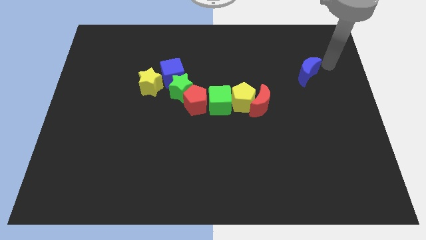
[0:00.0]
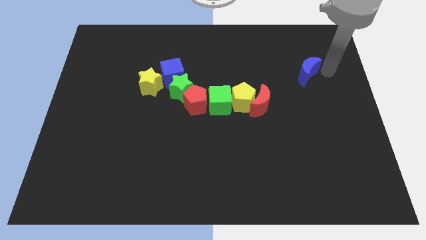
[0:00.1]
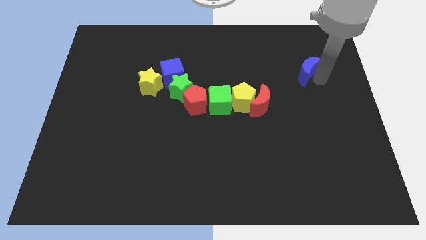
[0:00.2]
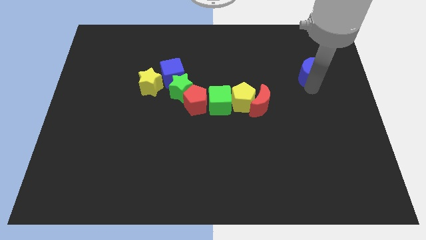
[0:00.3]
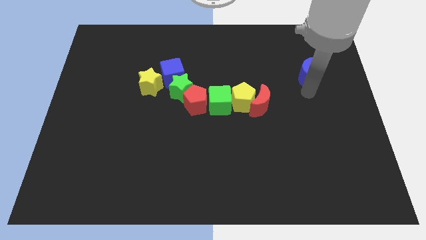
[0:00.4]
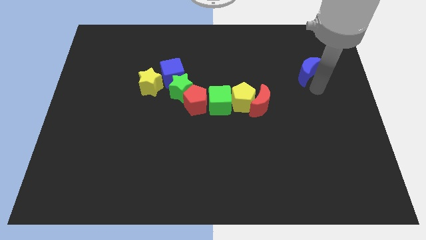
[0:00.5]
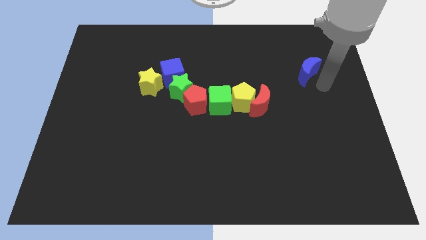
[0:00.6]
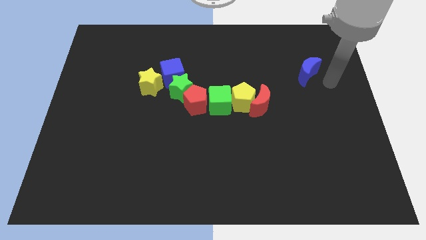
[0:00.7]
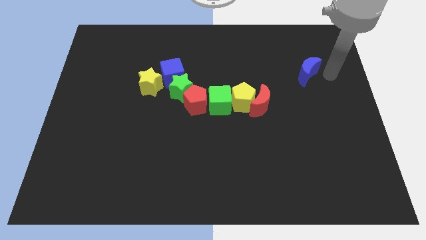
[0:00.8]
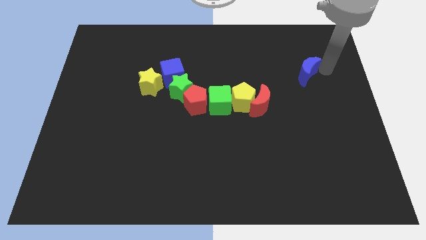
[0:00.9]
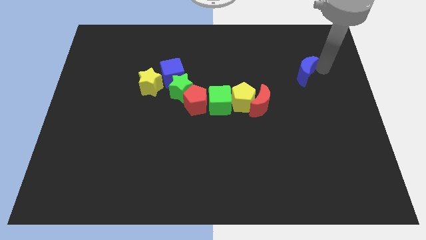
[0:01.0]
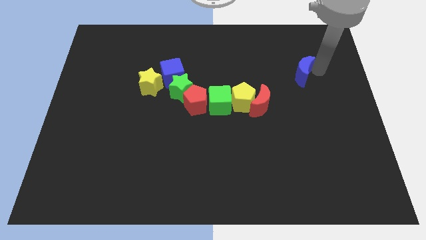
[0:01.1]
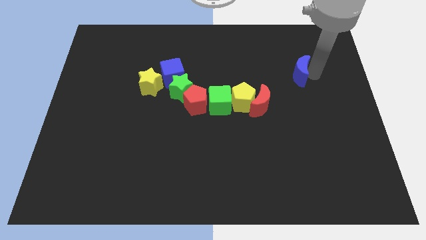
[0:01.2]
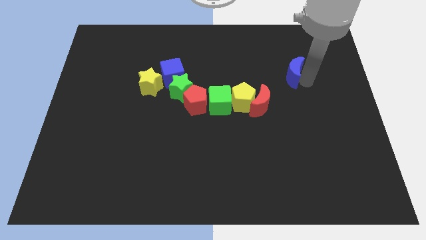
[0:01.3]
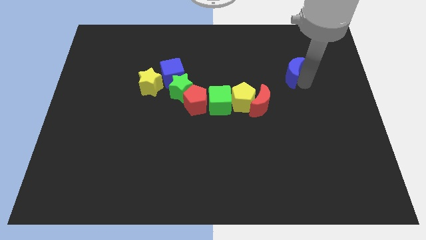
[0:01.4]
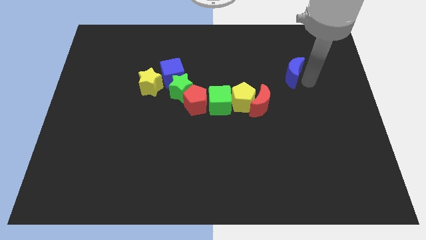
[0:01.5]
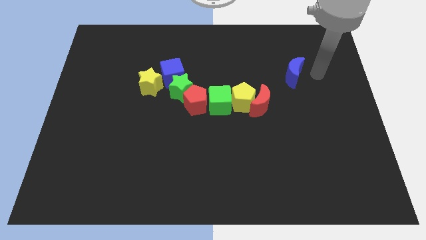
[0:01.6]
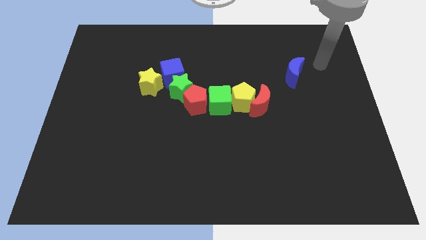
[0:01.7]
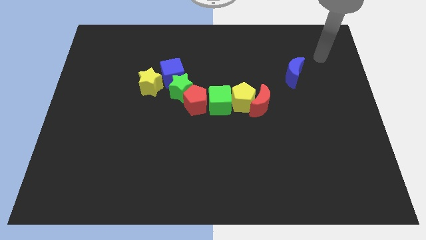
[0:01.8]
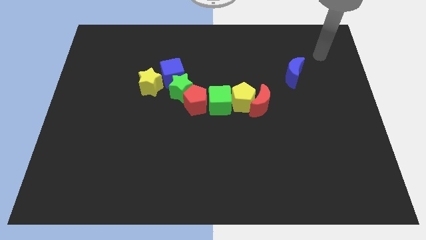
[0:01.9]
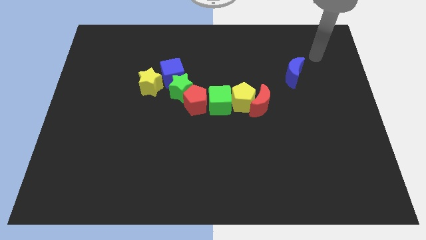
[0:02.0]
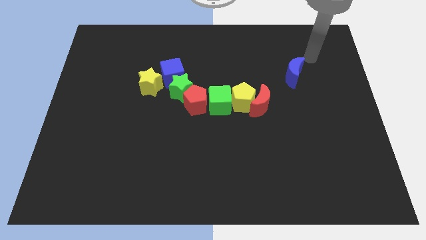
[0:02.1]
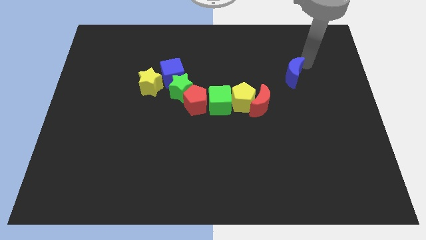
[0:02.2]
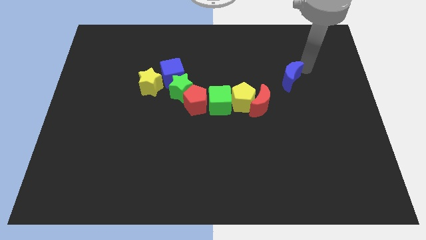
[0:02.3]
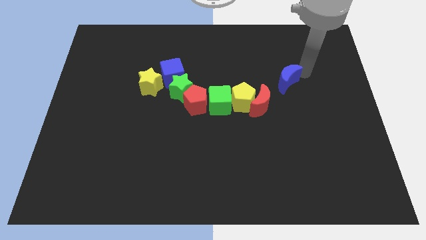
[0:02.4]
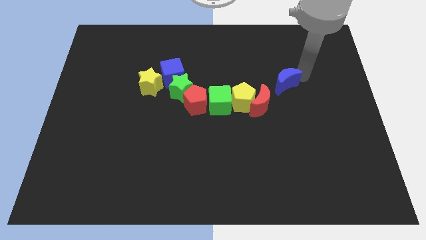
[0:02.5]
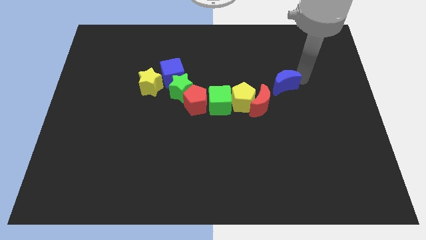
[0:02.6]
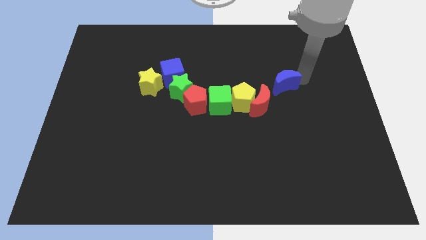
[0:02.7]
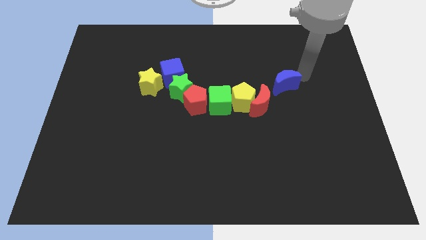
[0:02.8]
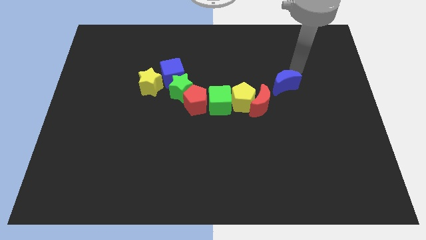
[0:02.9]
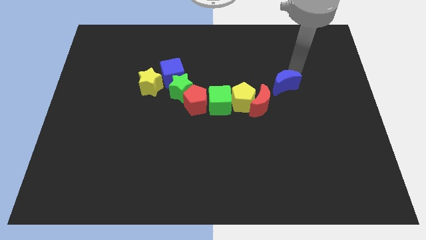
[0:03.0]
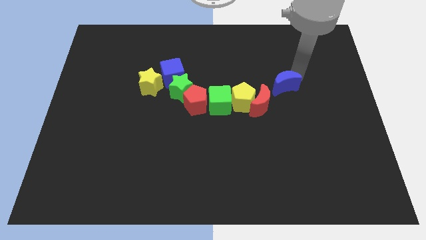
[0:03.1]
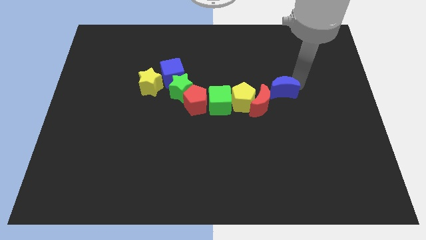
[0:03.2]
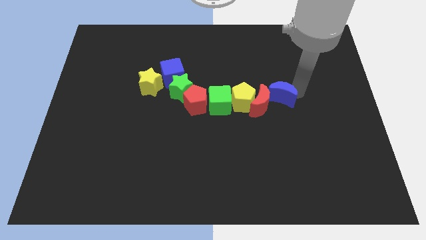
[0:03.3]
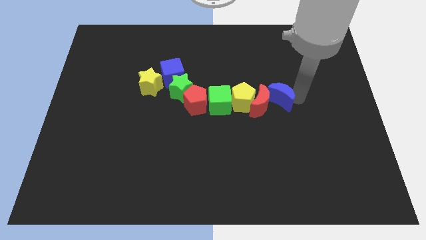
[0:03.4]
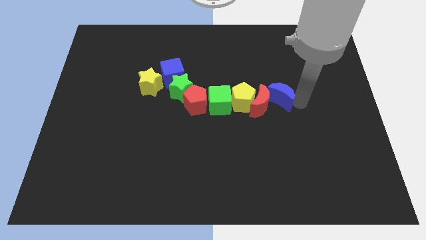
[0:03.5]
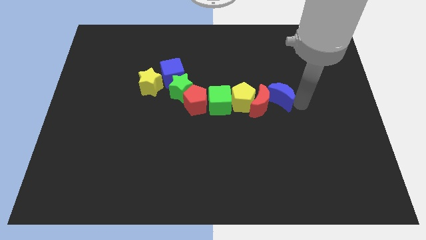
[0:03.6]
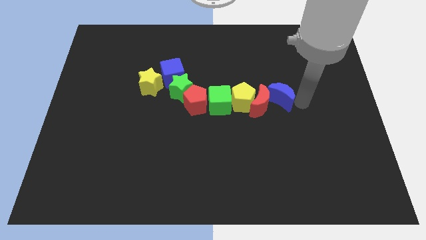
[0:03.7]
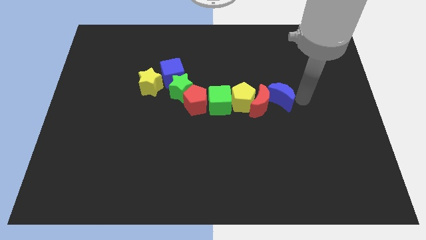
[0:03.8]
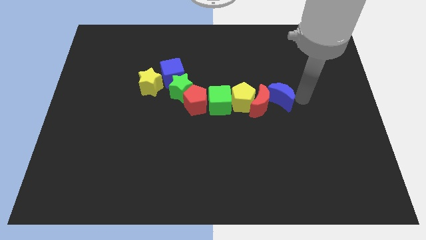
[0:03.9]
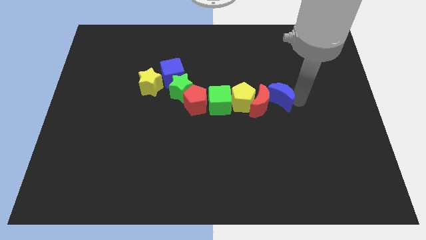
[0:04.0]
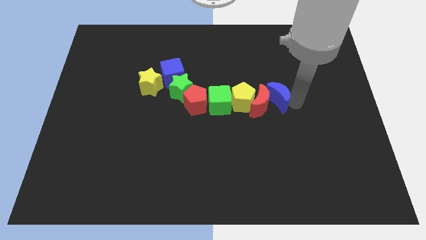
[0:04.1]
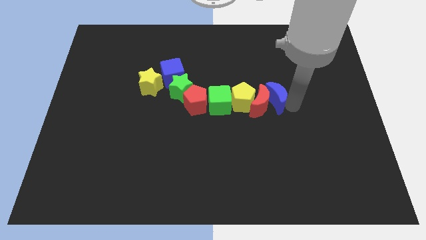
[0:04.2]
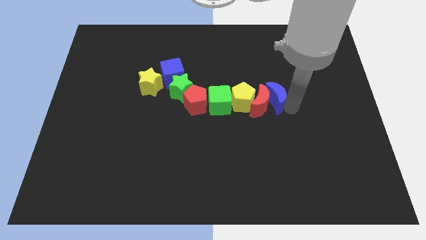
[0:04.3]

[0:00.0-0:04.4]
move the blue crescent to the right of the red crescent

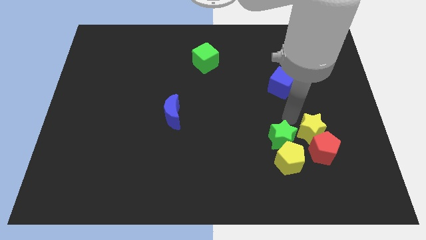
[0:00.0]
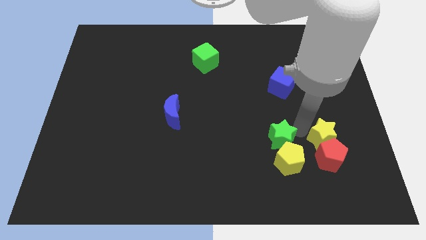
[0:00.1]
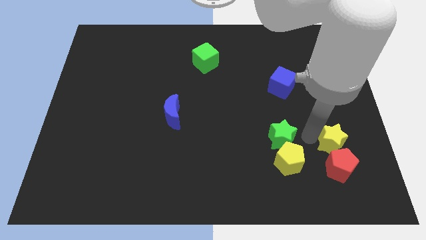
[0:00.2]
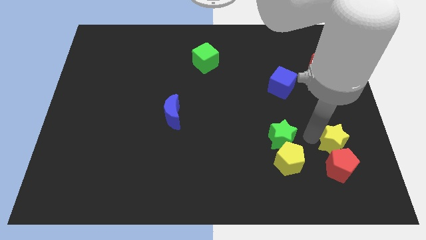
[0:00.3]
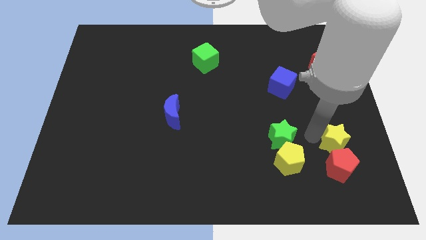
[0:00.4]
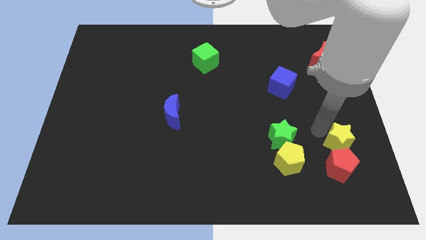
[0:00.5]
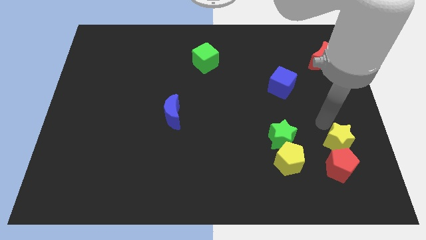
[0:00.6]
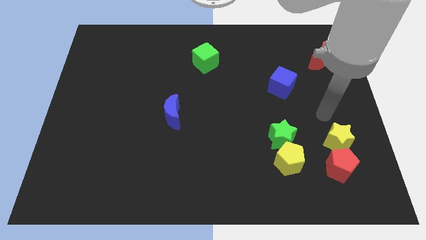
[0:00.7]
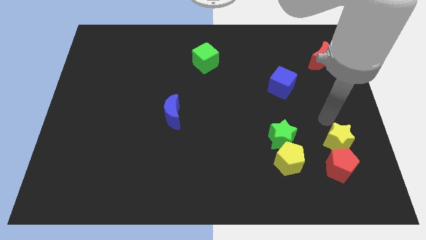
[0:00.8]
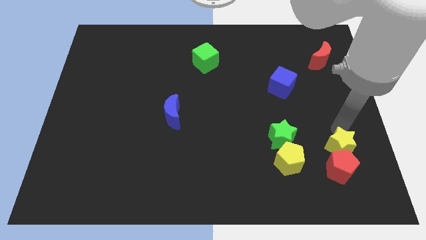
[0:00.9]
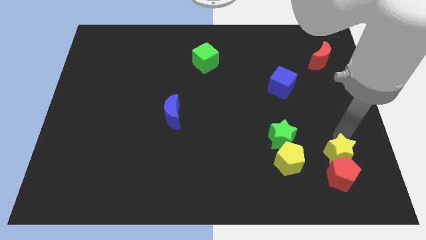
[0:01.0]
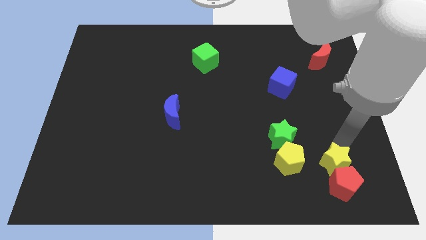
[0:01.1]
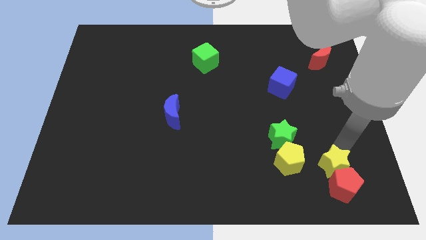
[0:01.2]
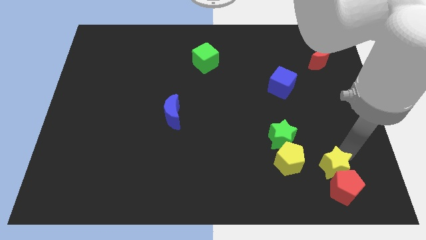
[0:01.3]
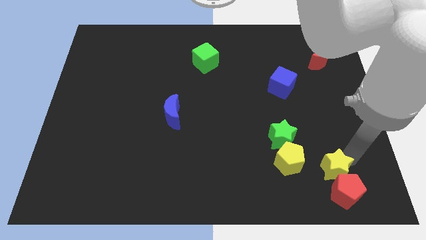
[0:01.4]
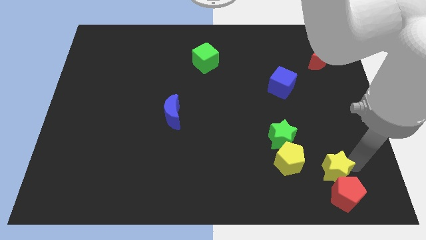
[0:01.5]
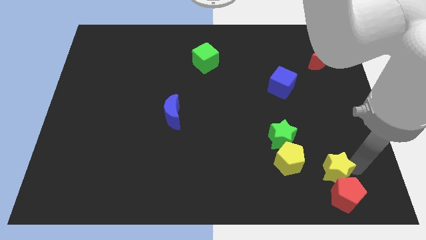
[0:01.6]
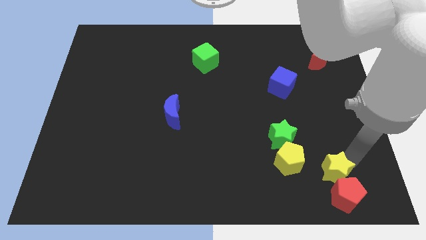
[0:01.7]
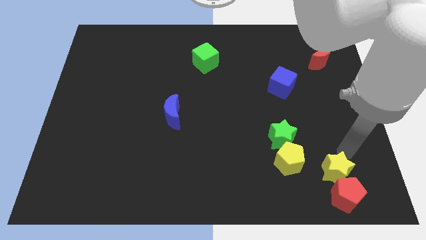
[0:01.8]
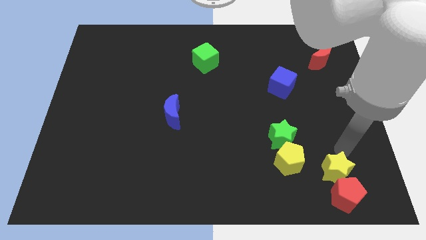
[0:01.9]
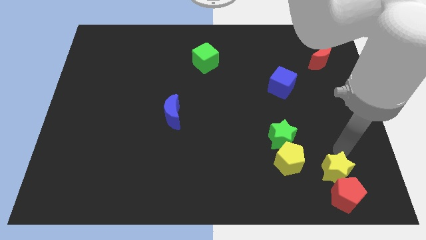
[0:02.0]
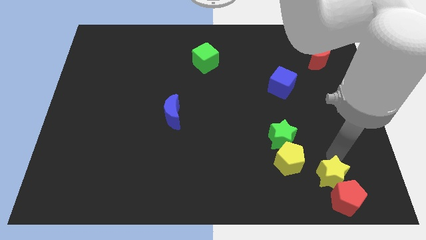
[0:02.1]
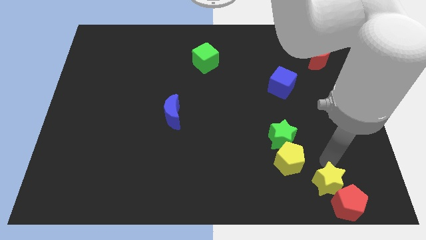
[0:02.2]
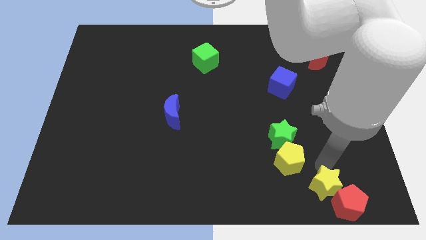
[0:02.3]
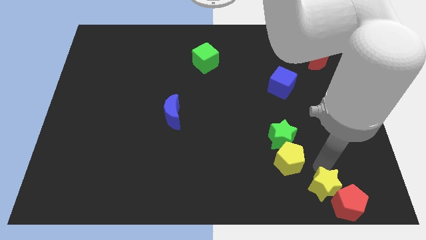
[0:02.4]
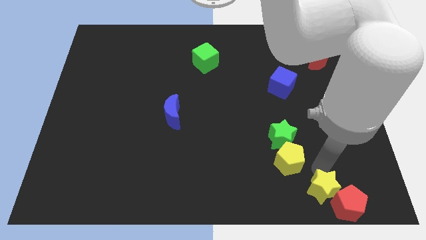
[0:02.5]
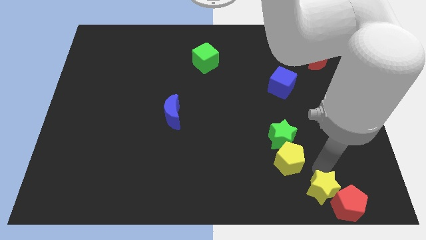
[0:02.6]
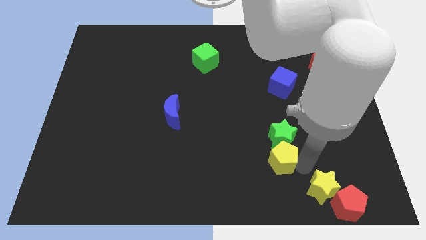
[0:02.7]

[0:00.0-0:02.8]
push the yellow star into the red pentagon

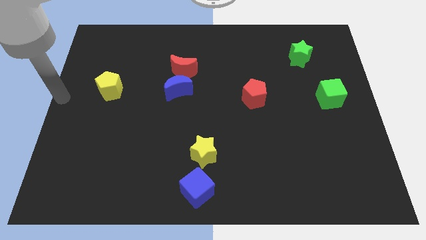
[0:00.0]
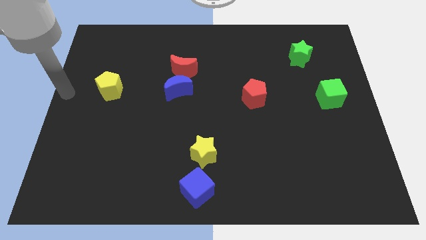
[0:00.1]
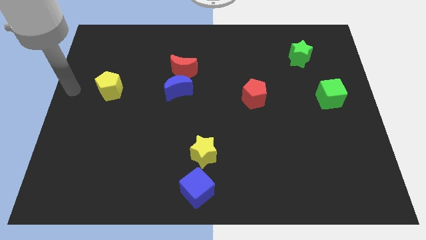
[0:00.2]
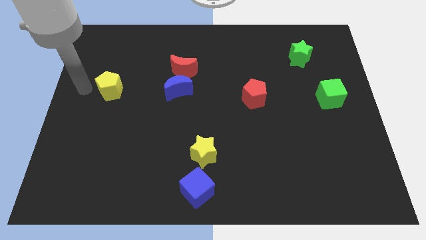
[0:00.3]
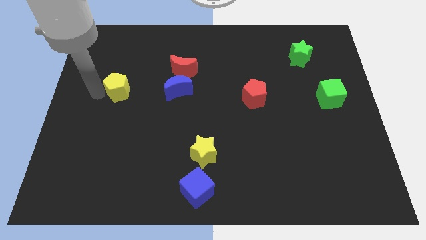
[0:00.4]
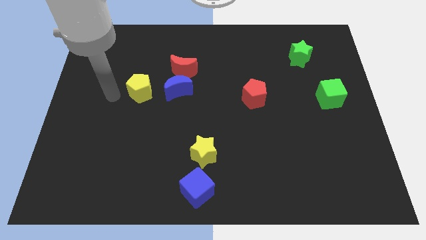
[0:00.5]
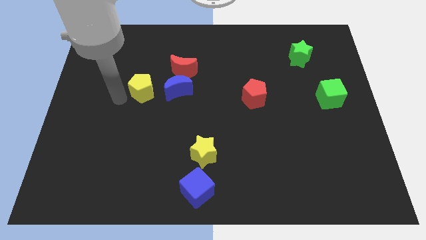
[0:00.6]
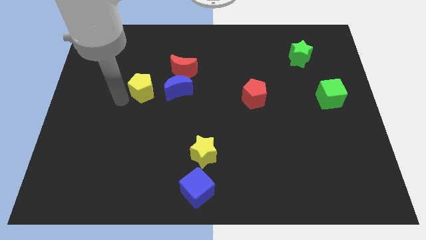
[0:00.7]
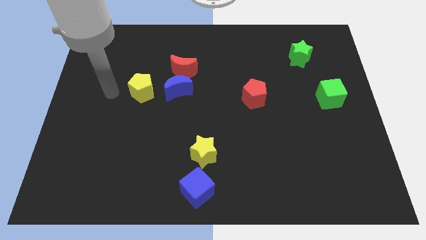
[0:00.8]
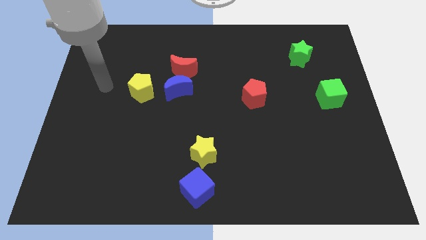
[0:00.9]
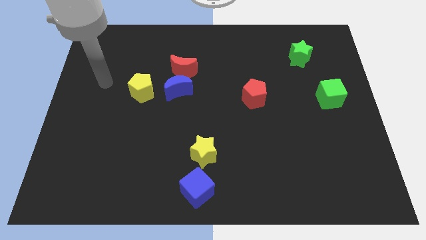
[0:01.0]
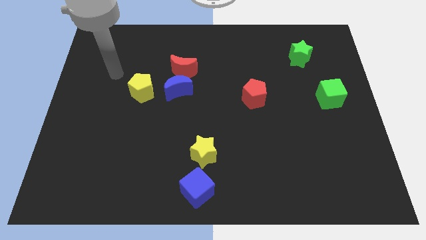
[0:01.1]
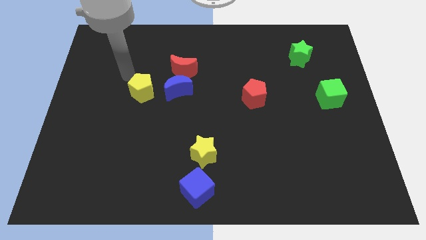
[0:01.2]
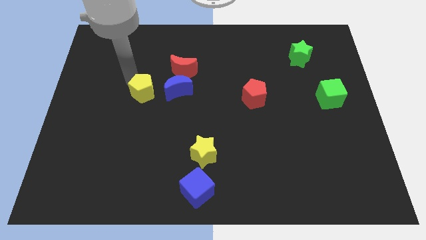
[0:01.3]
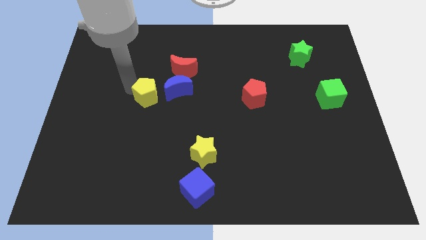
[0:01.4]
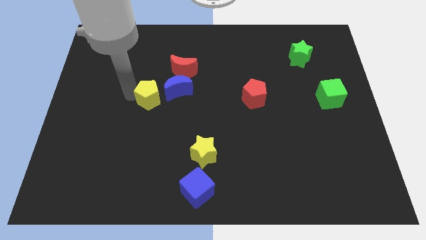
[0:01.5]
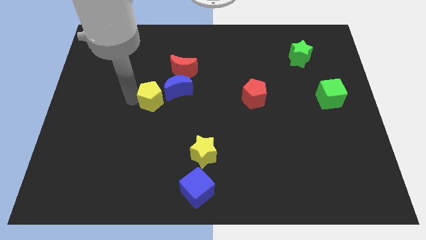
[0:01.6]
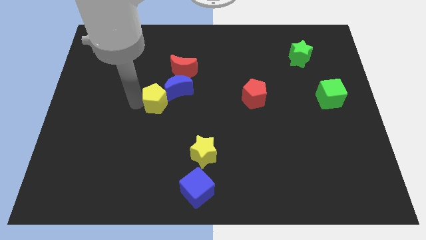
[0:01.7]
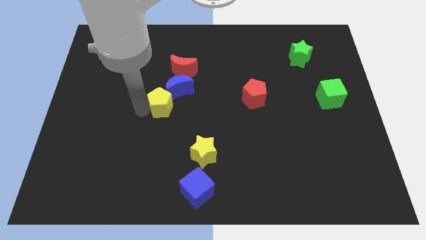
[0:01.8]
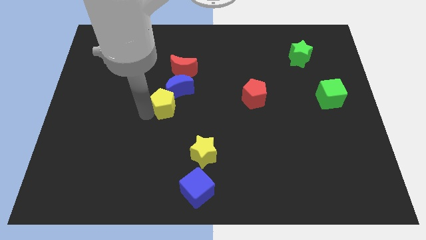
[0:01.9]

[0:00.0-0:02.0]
place the yellow pentagon to the left side of the blue moon
